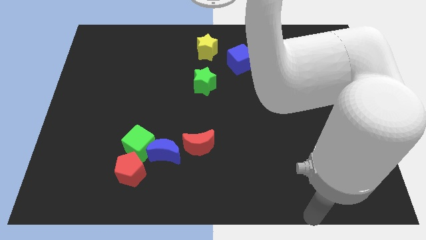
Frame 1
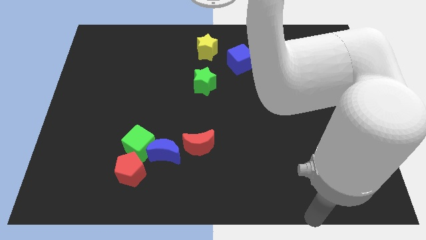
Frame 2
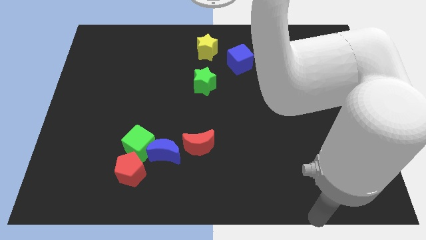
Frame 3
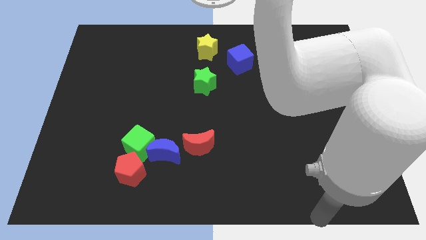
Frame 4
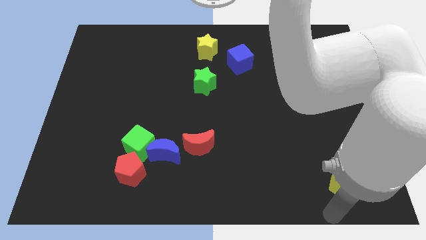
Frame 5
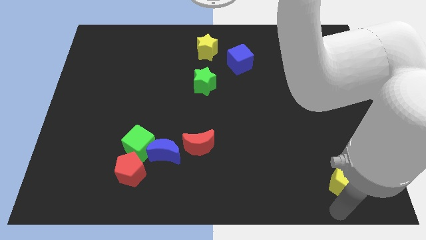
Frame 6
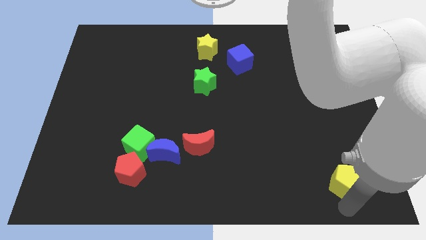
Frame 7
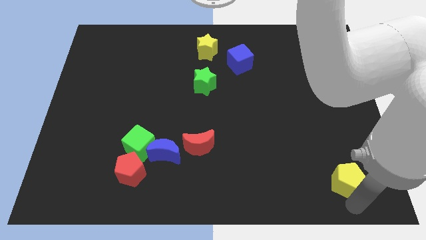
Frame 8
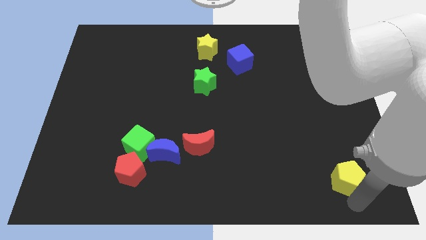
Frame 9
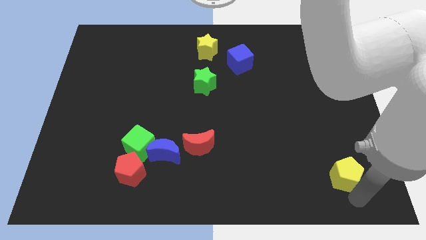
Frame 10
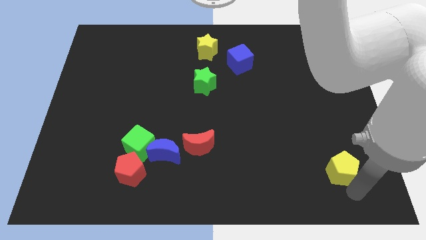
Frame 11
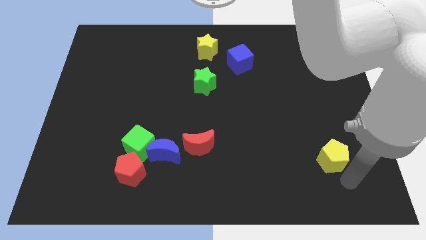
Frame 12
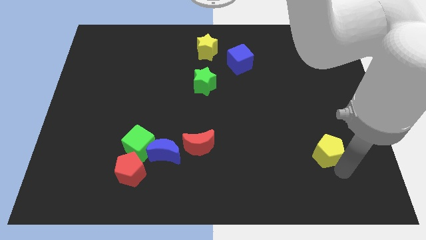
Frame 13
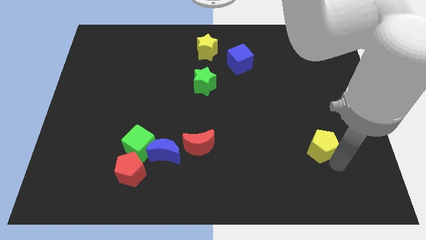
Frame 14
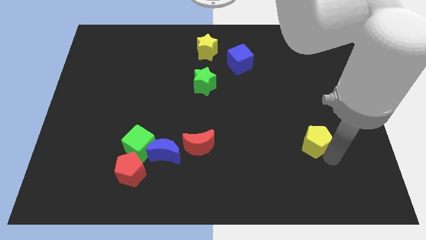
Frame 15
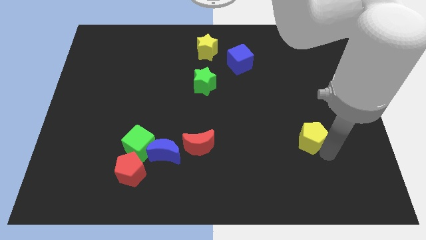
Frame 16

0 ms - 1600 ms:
move yellow pentagon horizontally to the right side of the red crescent

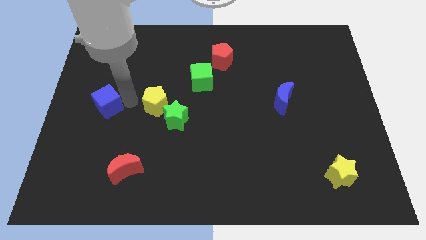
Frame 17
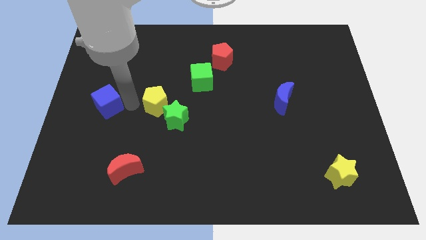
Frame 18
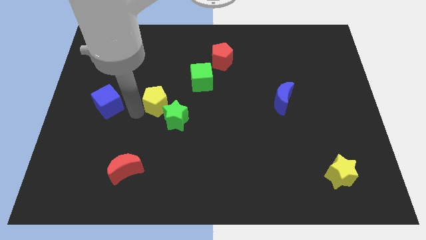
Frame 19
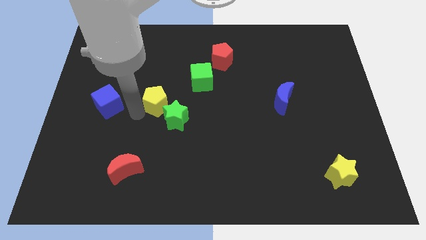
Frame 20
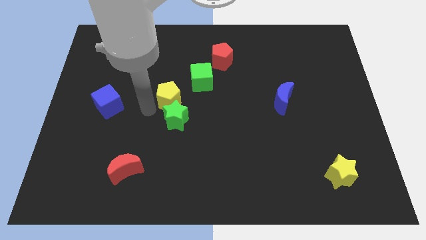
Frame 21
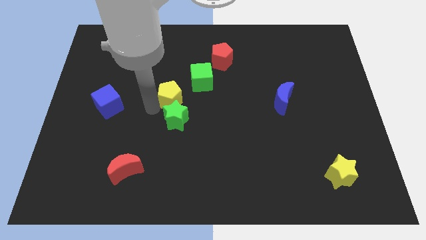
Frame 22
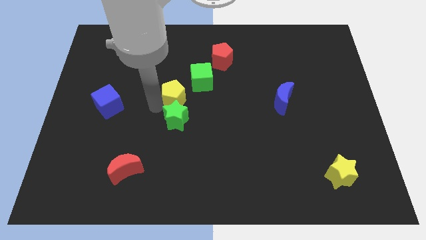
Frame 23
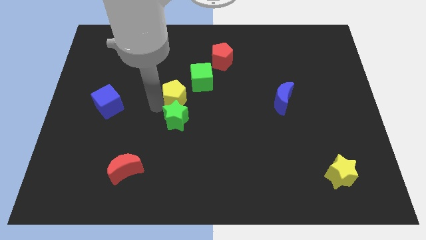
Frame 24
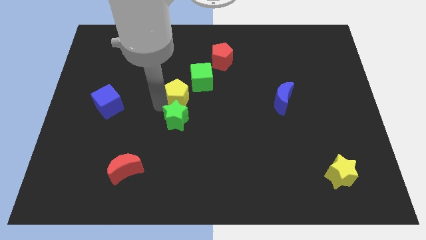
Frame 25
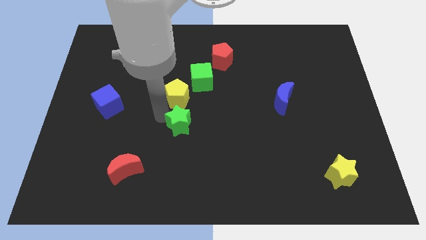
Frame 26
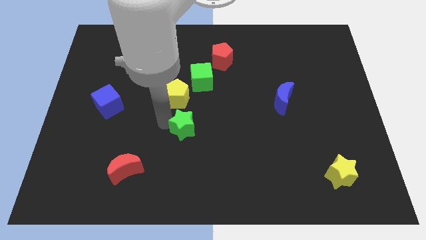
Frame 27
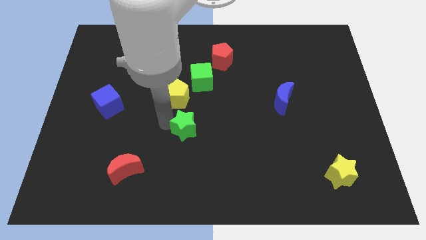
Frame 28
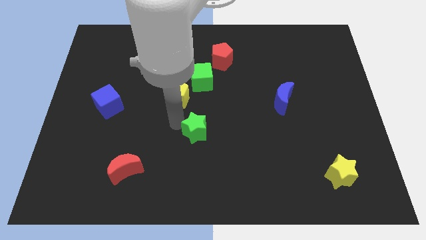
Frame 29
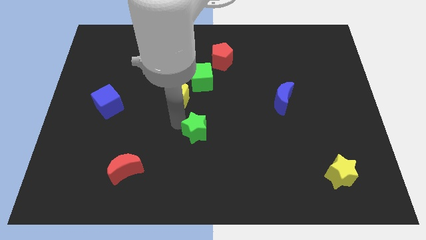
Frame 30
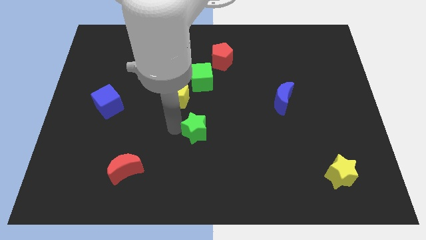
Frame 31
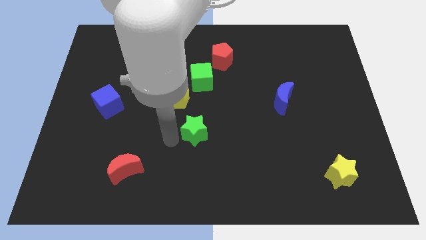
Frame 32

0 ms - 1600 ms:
push the green star downwards

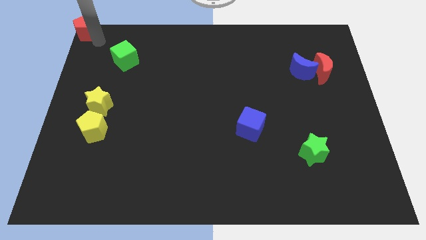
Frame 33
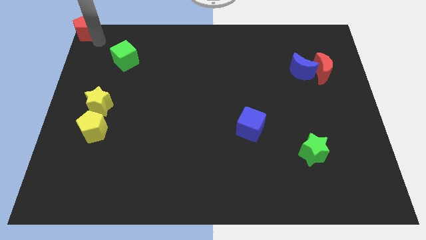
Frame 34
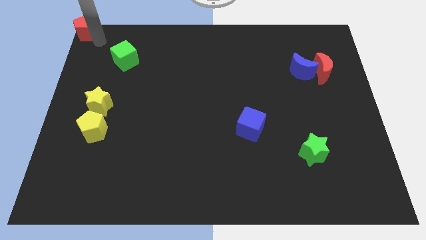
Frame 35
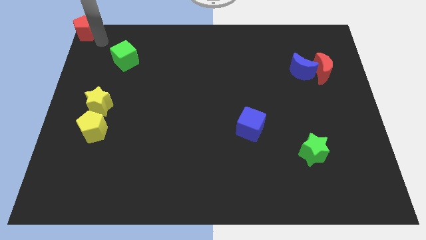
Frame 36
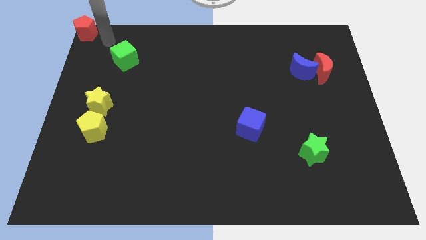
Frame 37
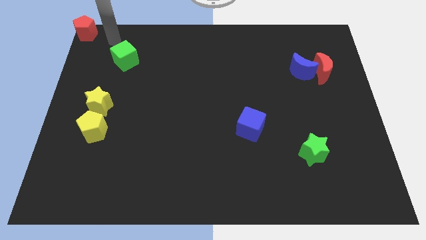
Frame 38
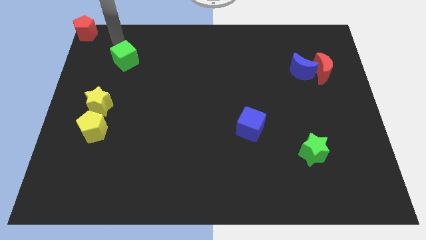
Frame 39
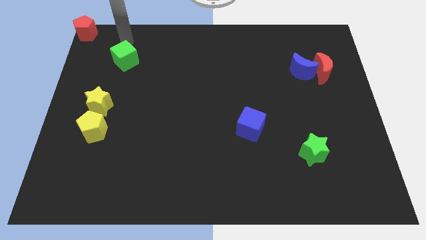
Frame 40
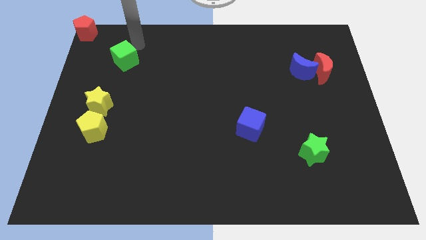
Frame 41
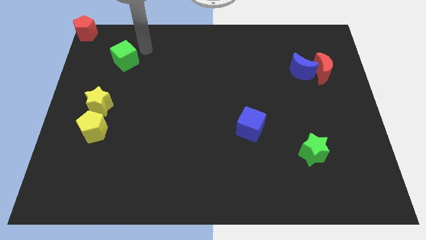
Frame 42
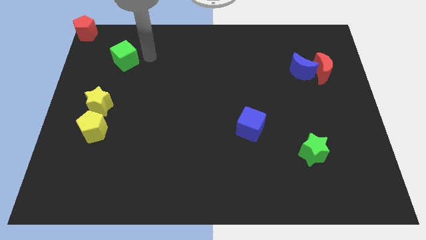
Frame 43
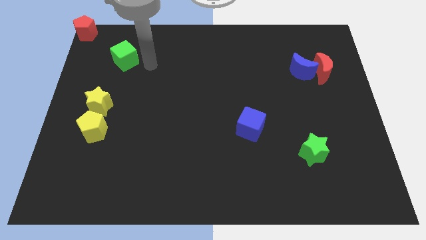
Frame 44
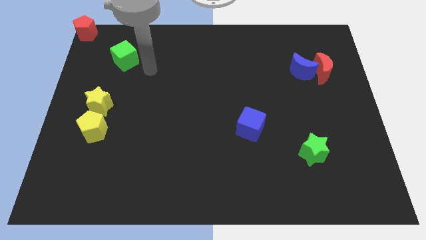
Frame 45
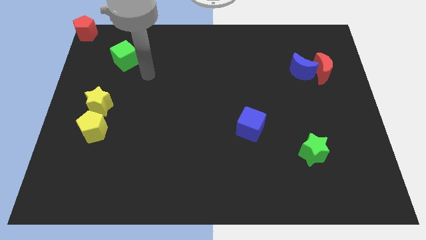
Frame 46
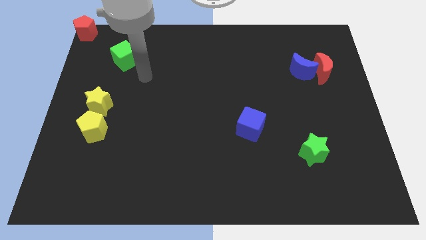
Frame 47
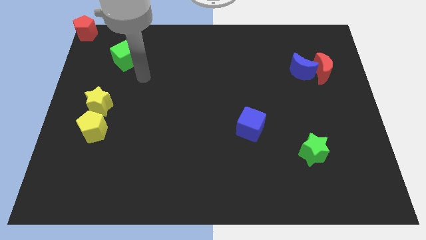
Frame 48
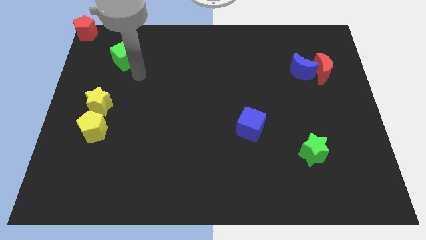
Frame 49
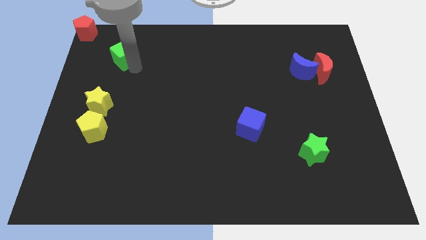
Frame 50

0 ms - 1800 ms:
place your arm diagonally to the green cube

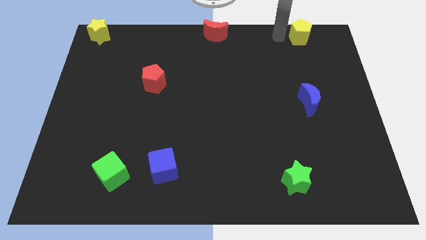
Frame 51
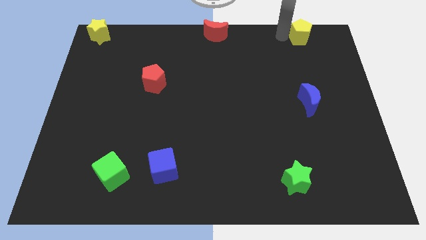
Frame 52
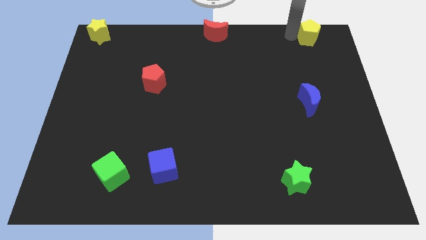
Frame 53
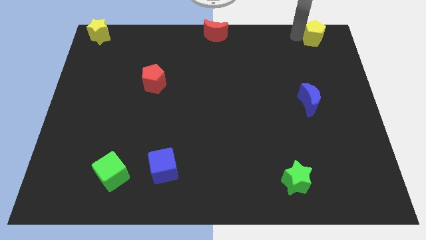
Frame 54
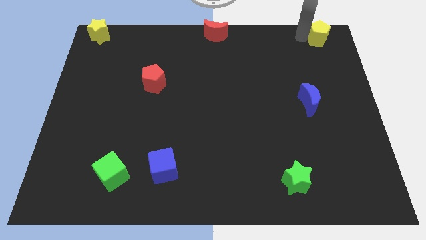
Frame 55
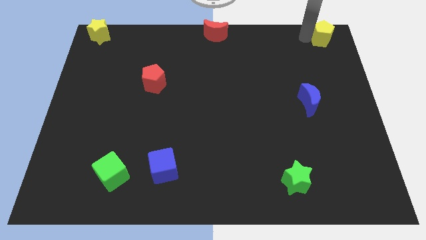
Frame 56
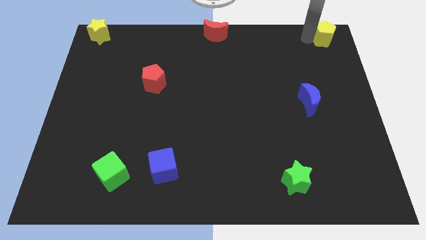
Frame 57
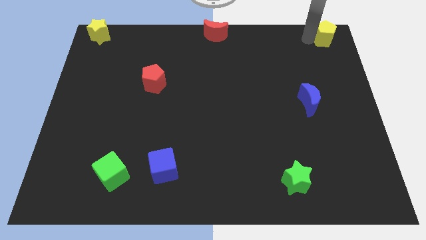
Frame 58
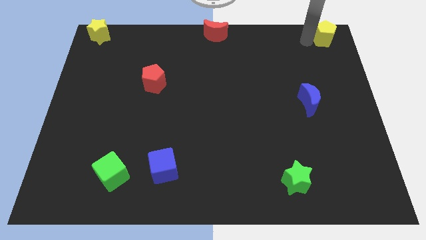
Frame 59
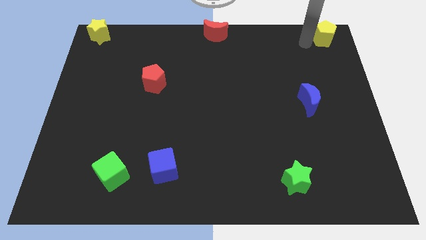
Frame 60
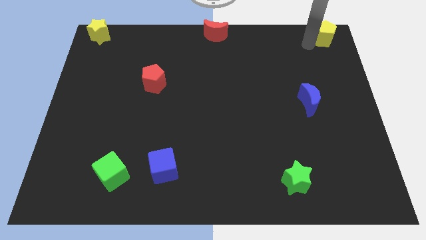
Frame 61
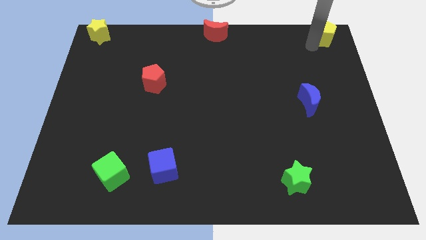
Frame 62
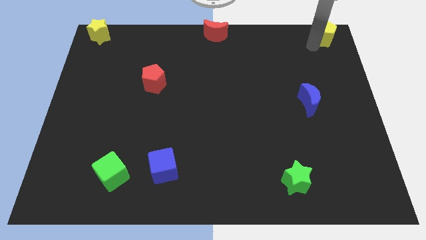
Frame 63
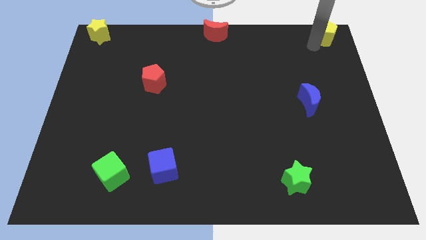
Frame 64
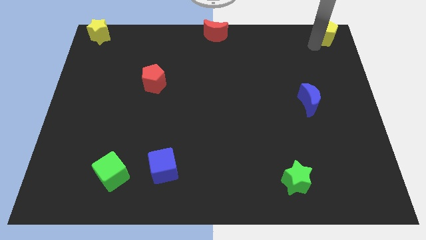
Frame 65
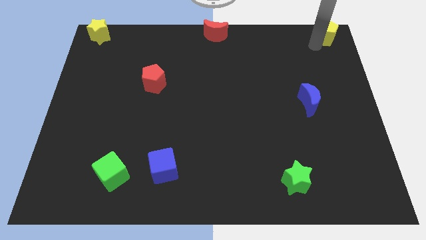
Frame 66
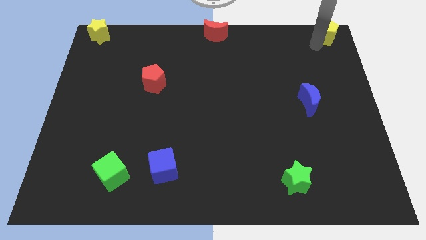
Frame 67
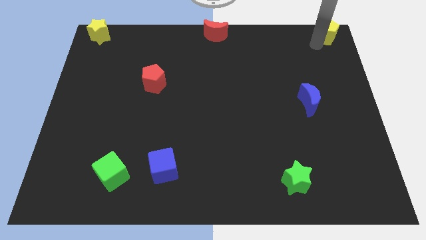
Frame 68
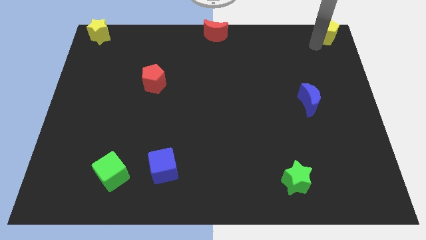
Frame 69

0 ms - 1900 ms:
push the yellow pentagon to the top right corner of the board

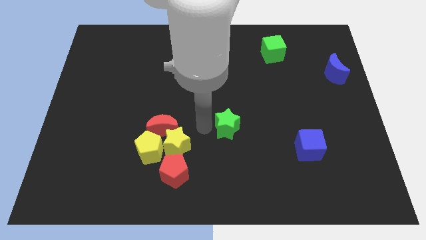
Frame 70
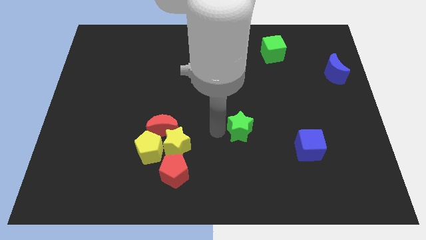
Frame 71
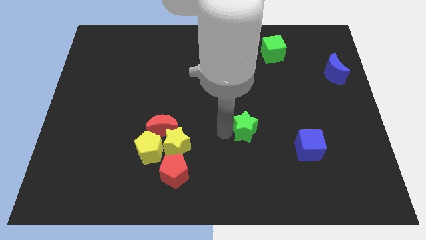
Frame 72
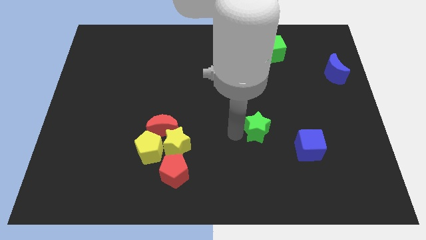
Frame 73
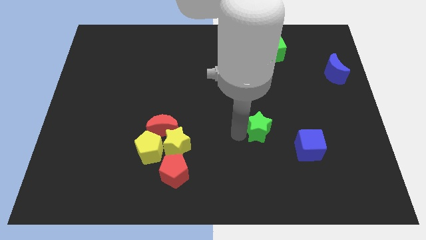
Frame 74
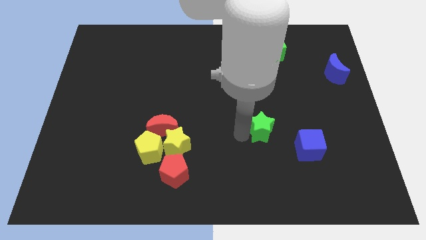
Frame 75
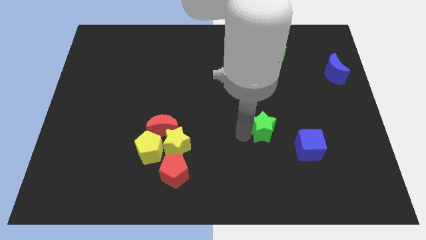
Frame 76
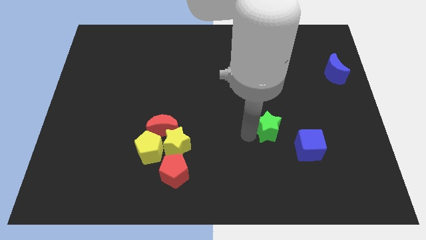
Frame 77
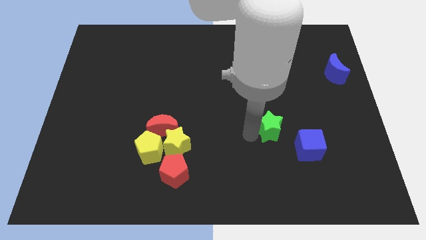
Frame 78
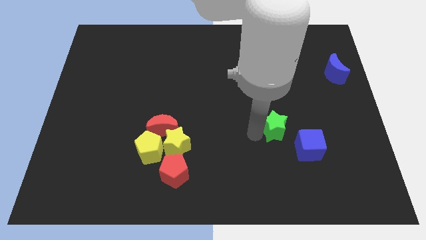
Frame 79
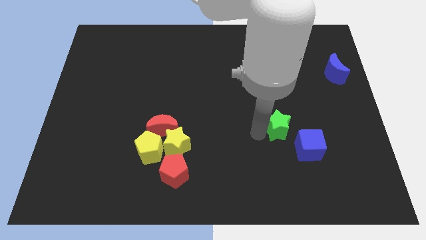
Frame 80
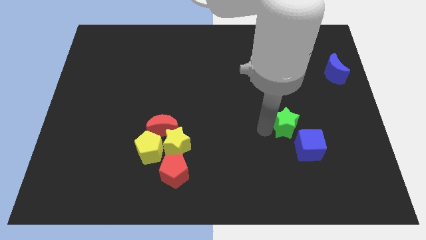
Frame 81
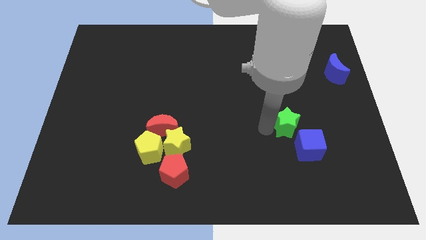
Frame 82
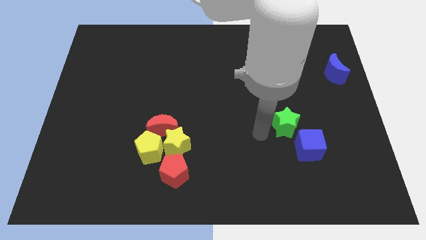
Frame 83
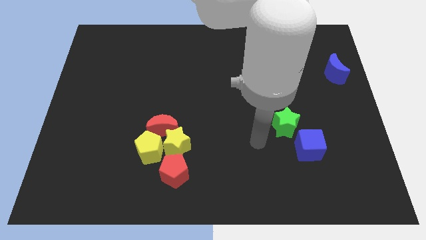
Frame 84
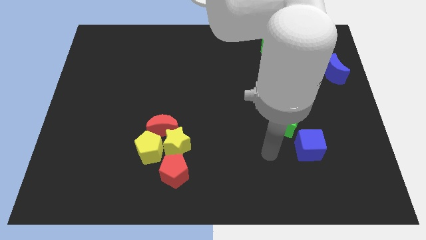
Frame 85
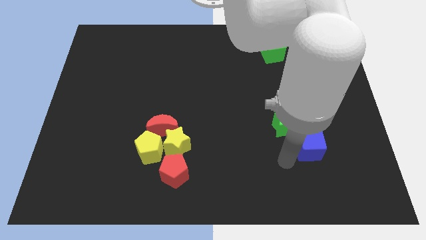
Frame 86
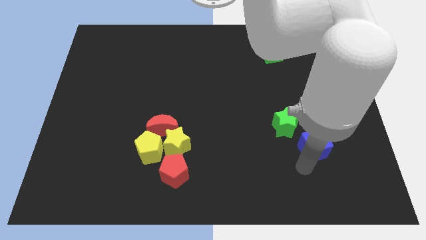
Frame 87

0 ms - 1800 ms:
place green star near the blue cube

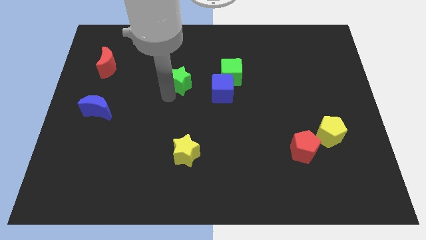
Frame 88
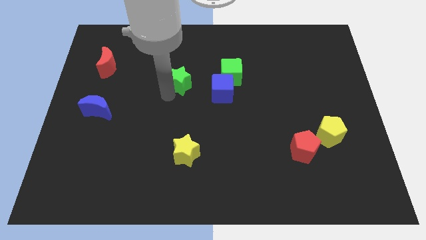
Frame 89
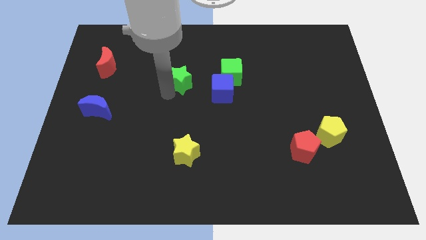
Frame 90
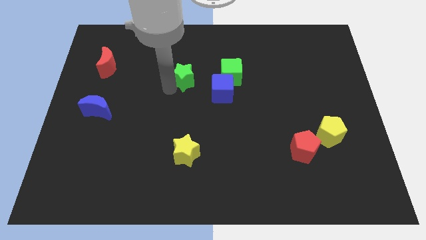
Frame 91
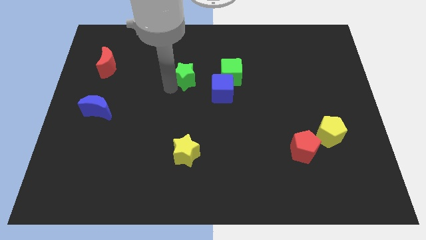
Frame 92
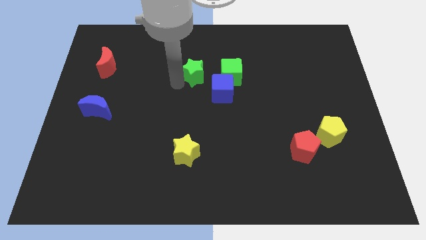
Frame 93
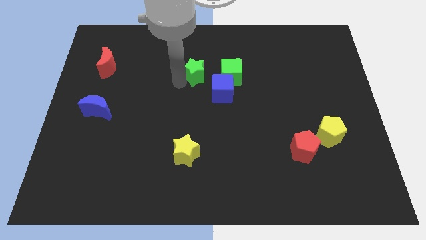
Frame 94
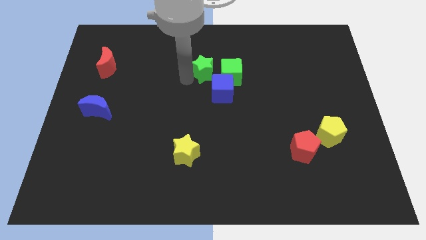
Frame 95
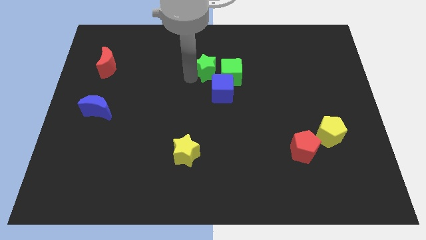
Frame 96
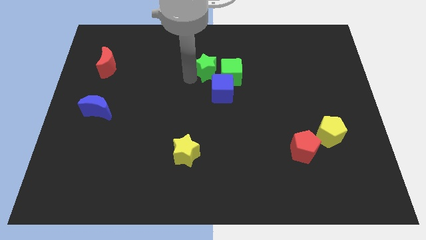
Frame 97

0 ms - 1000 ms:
push green star adjacent to green cube
